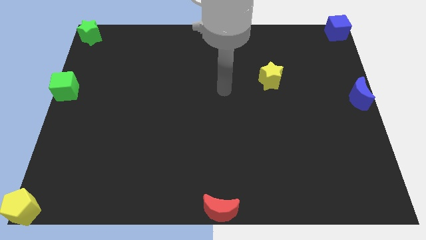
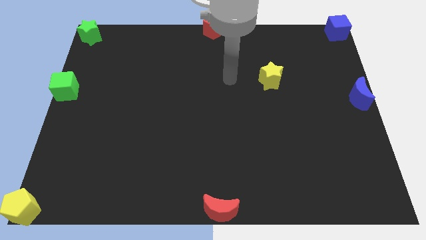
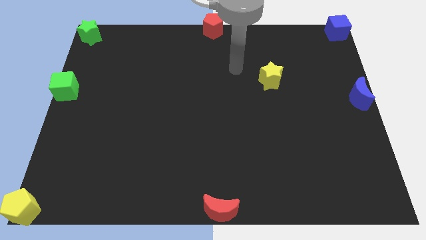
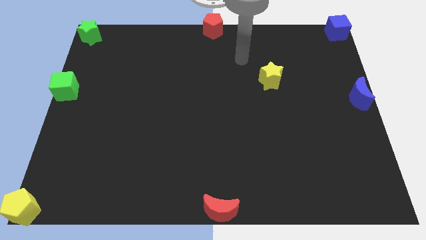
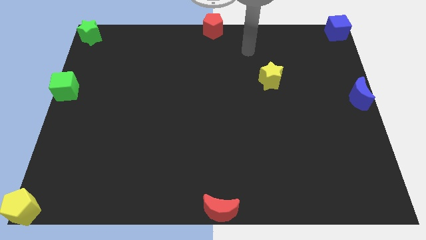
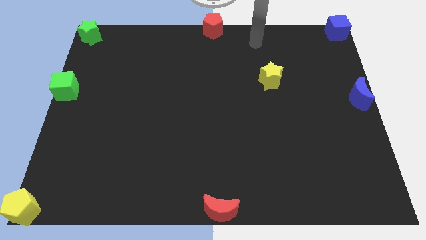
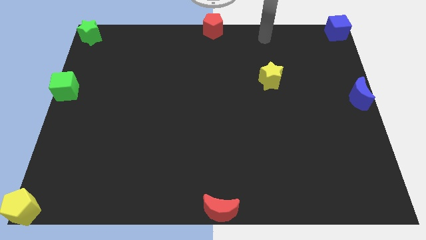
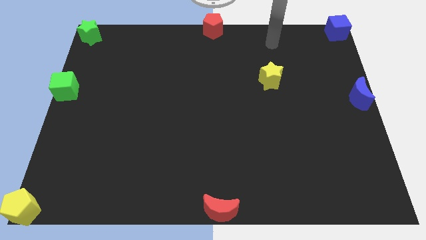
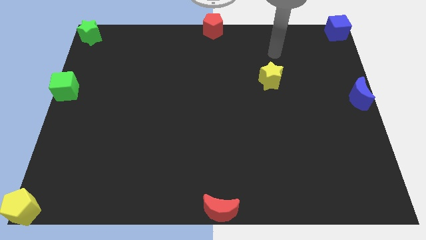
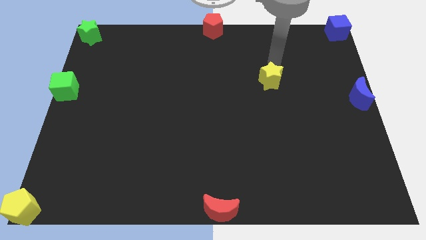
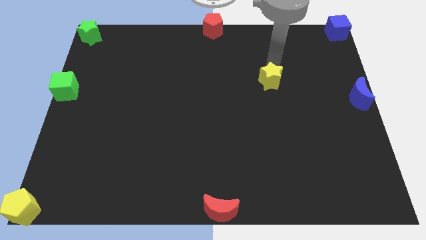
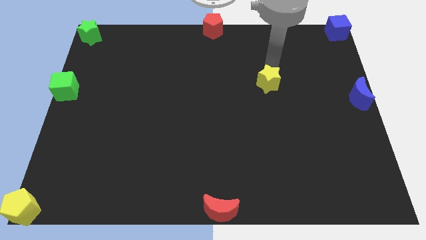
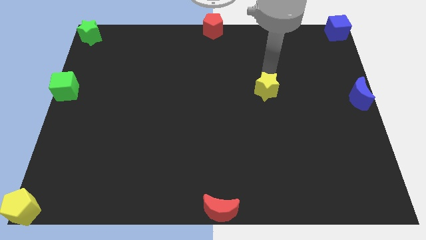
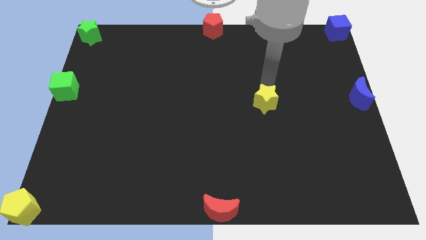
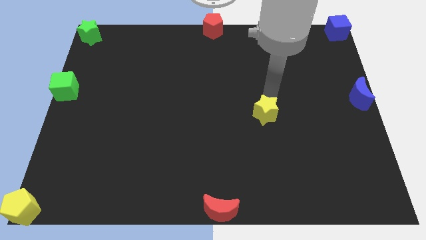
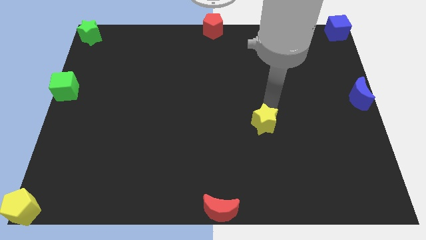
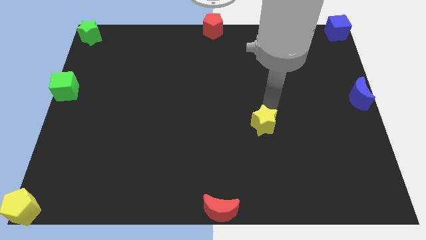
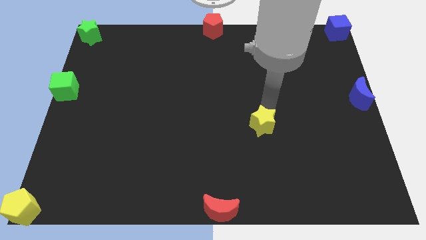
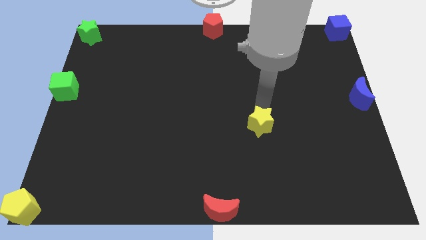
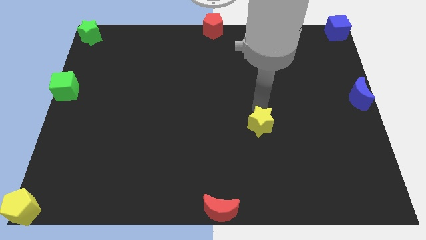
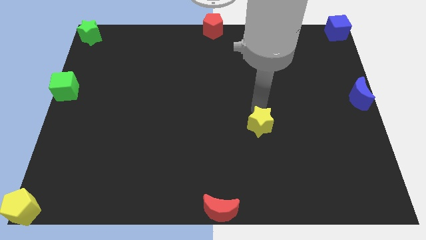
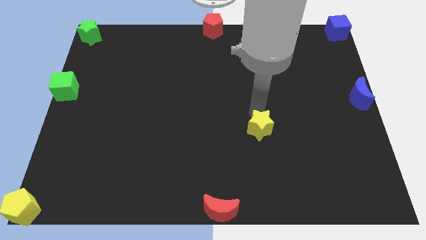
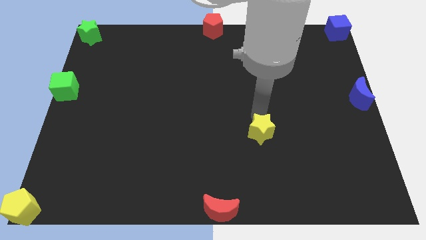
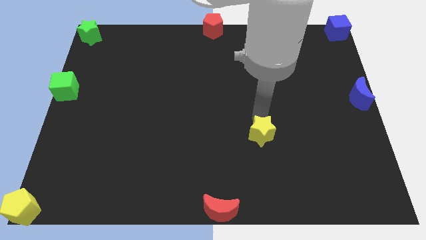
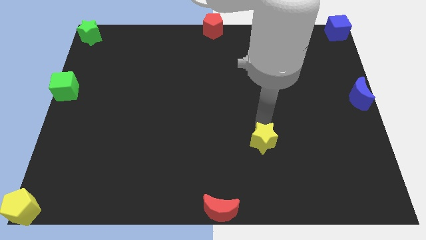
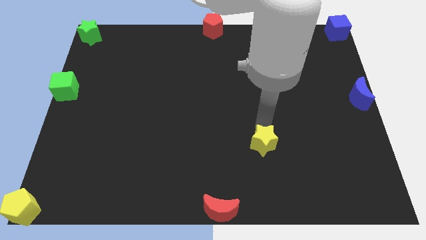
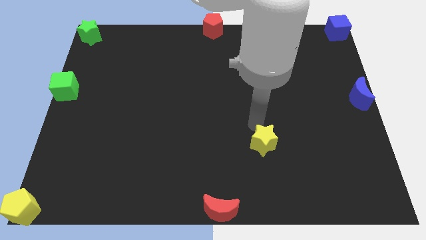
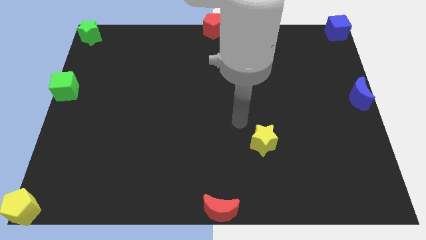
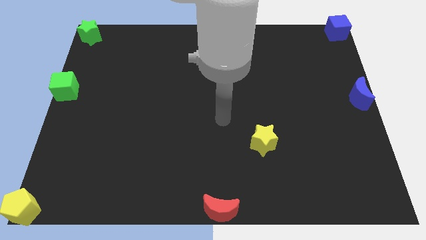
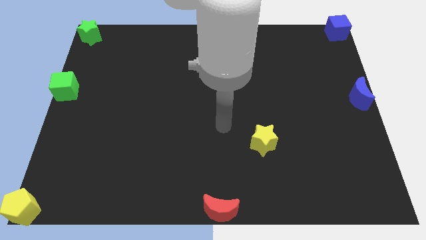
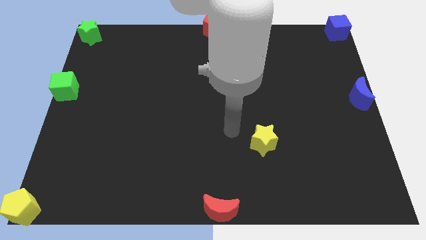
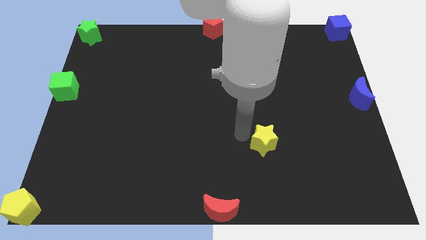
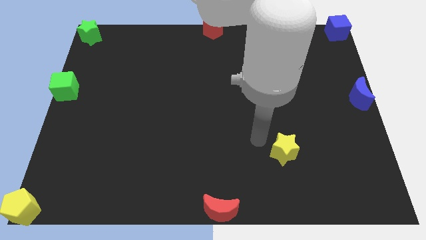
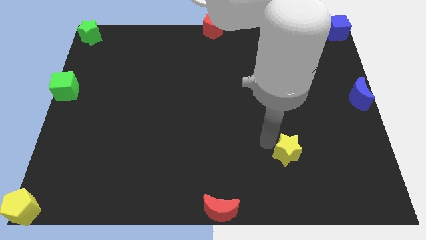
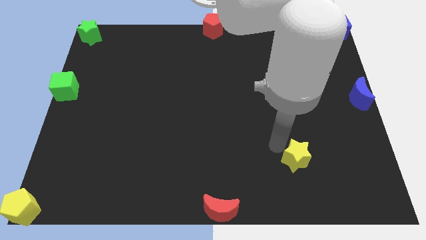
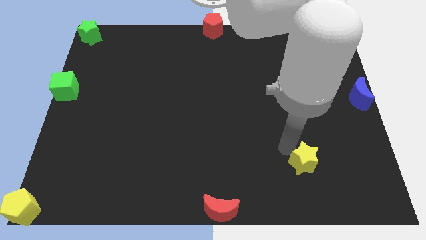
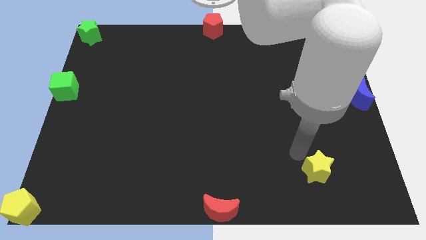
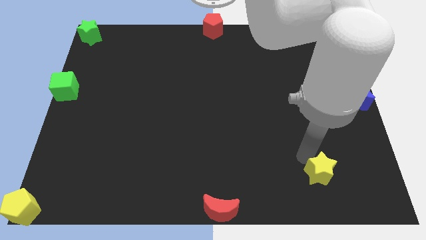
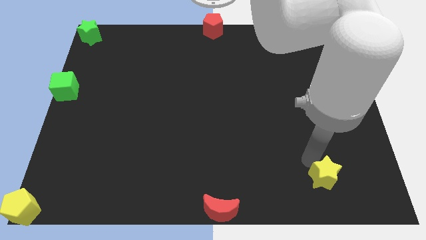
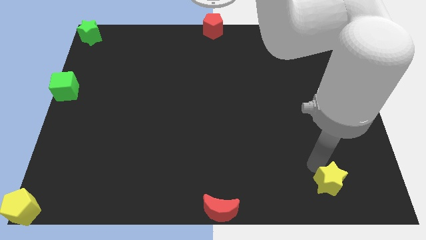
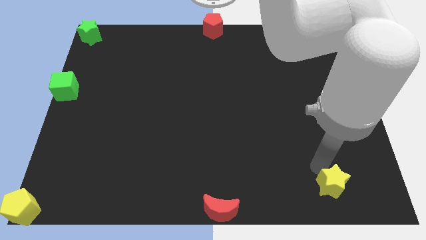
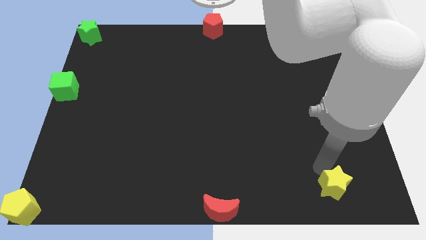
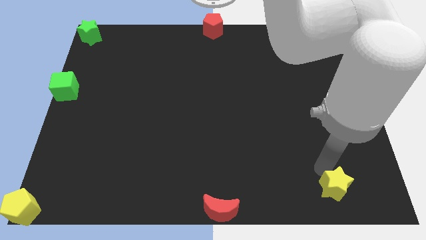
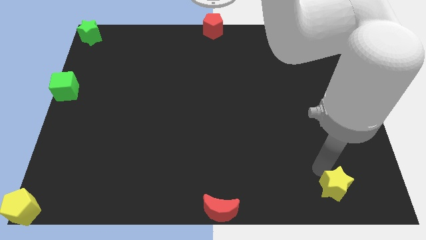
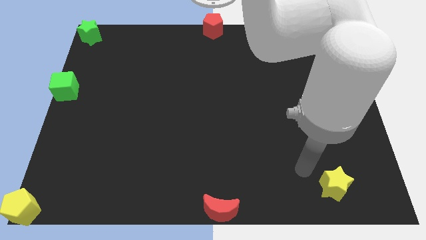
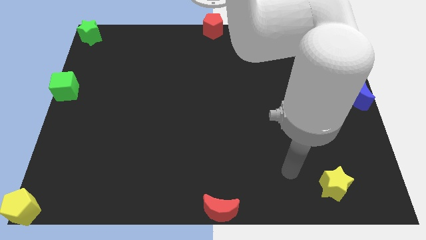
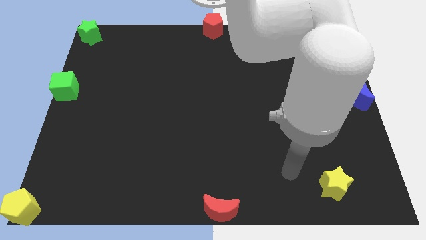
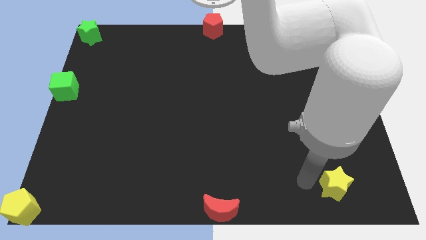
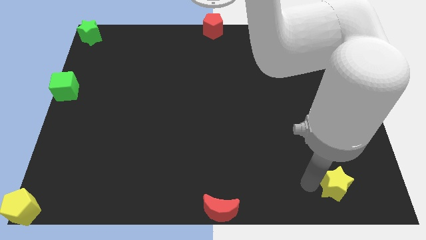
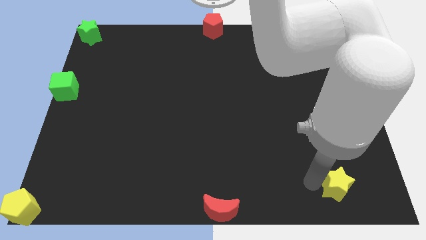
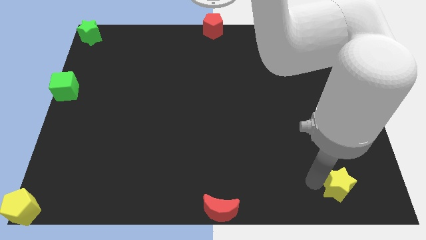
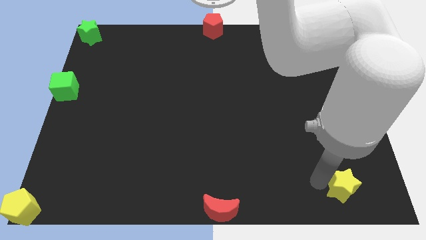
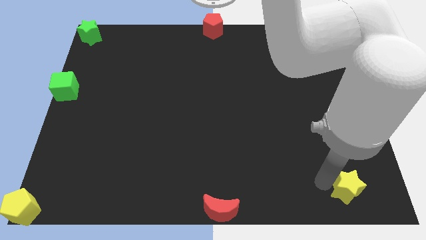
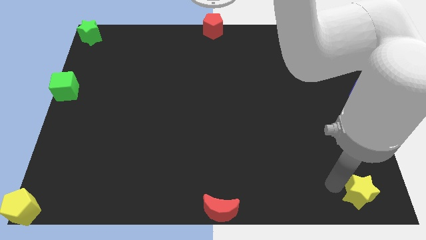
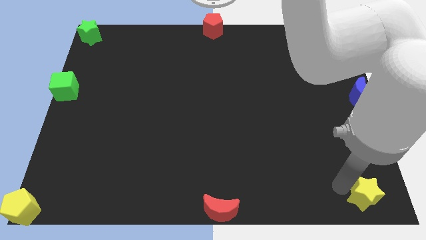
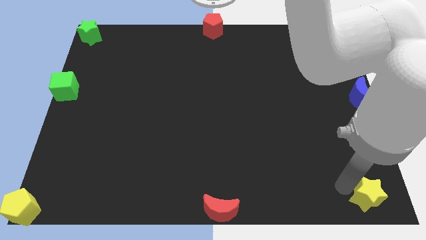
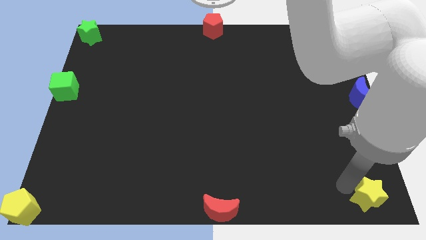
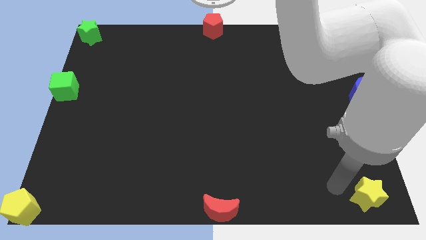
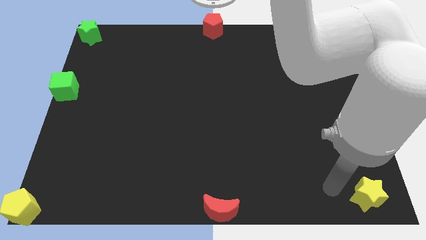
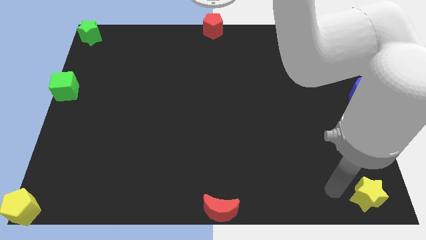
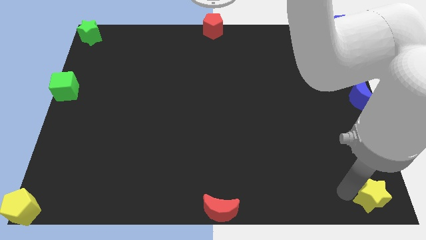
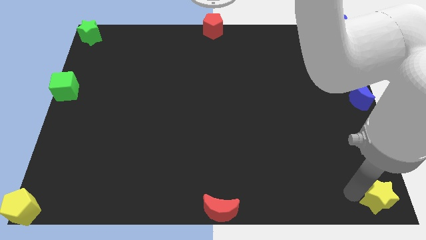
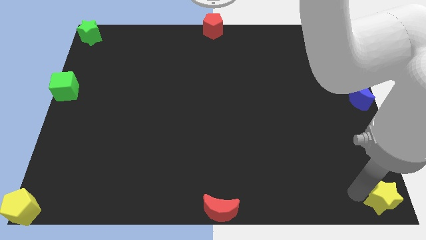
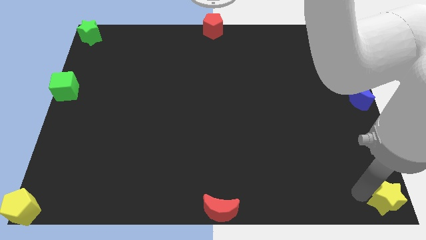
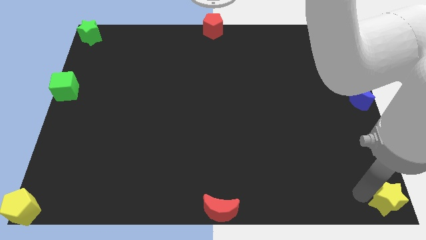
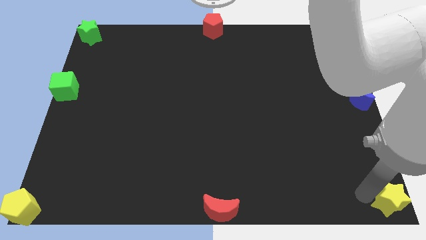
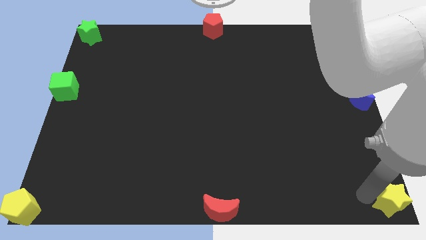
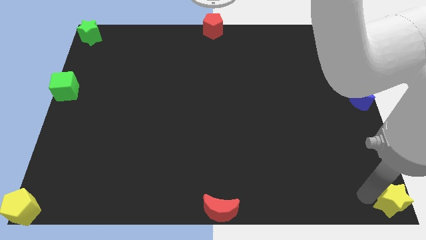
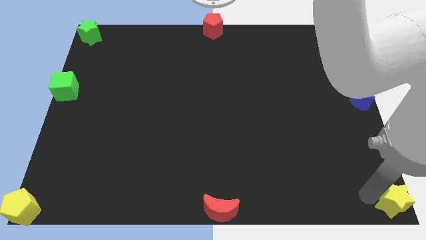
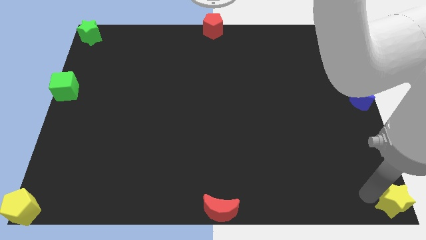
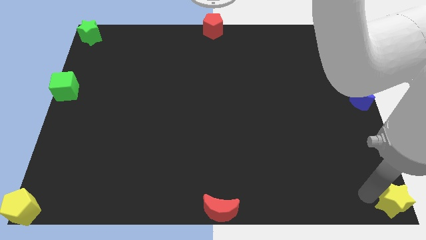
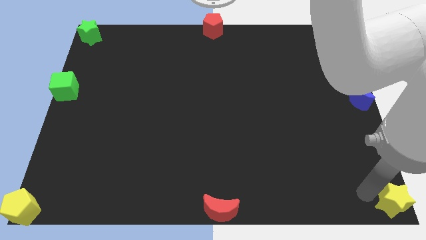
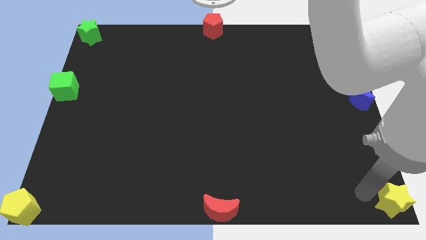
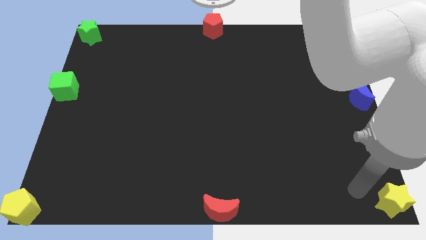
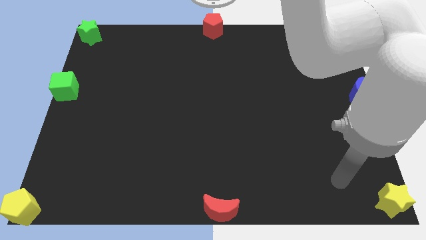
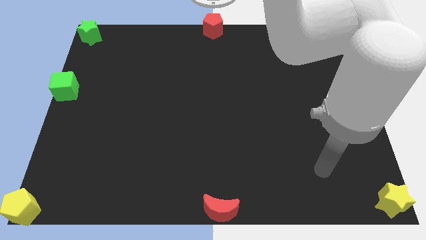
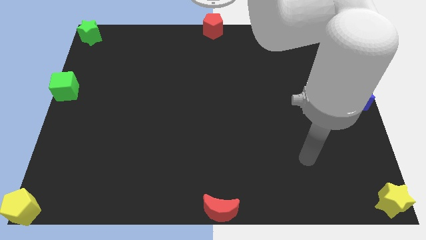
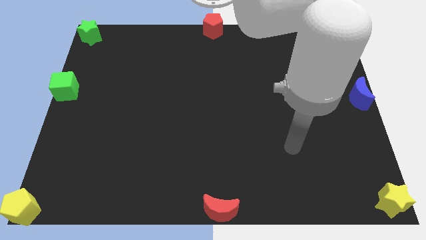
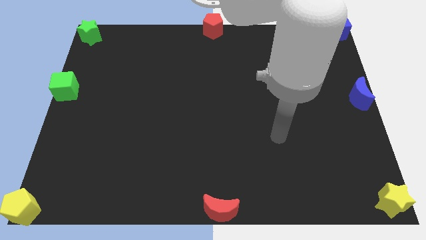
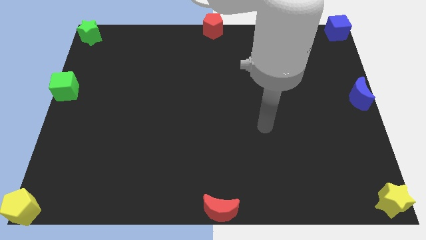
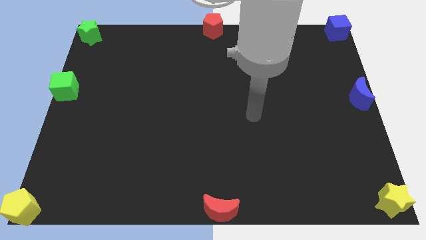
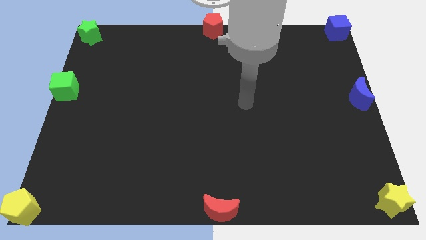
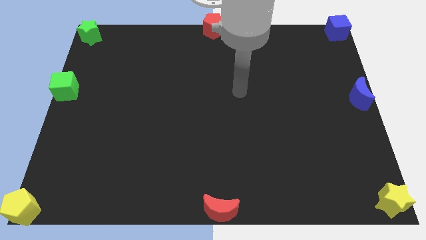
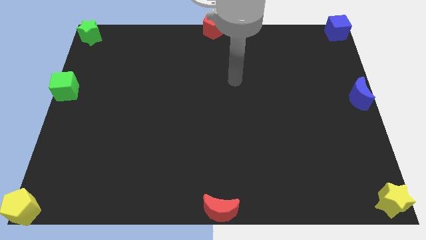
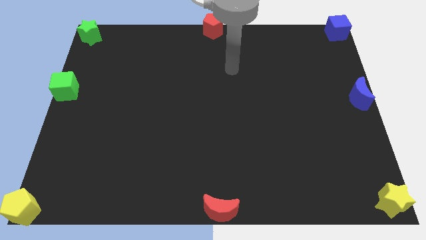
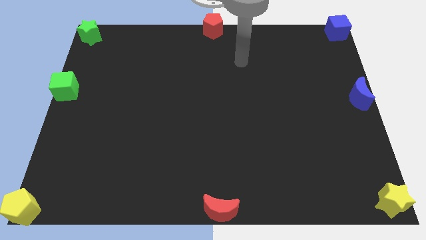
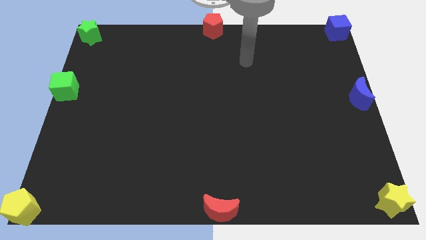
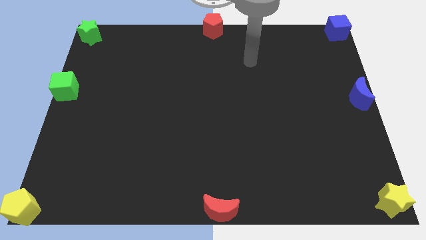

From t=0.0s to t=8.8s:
place the yellow star bottom right of the board

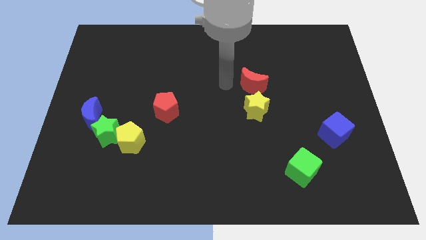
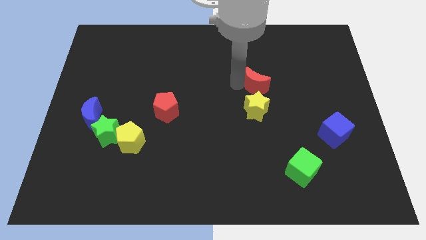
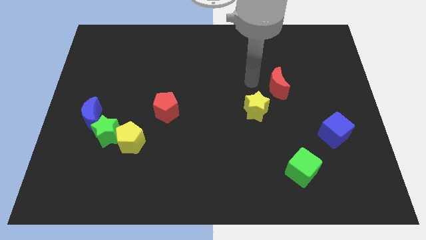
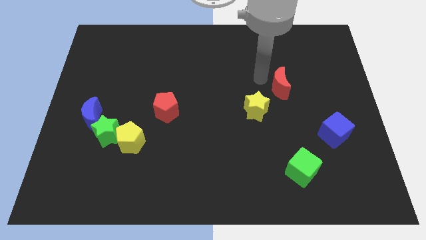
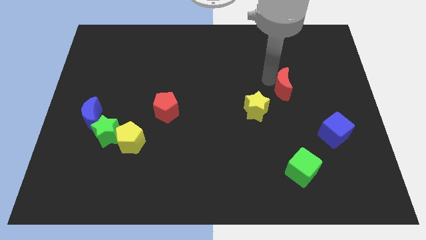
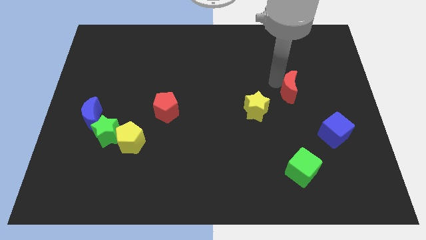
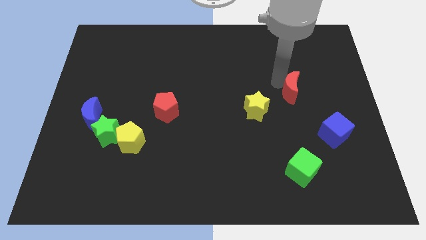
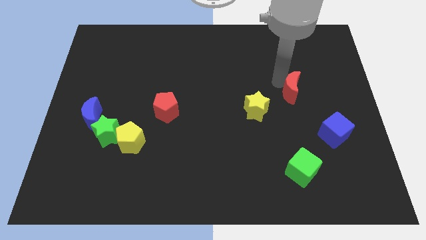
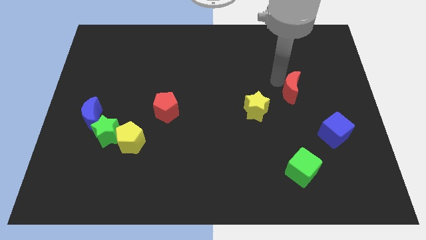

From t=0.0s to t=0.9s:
push the red crescent to the right of the board
